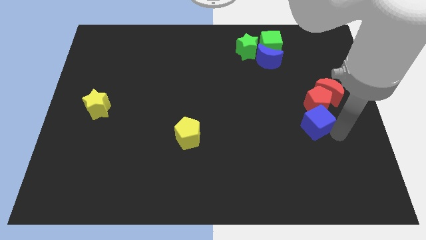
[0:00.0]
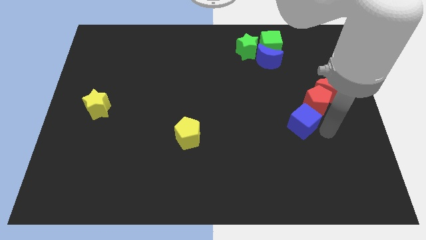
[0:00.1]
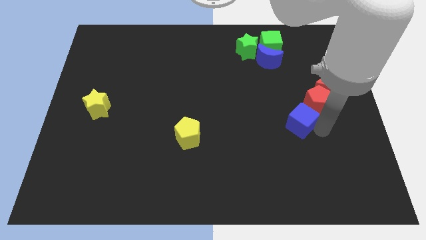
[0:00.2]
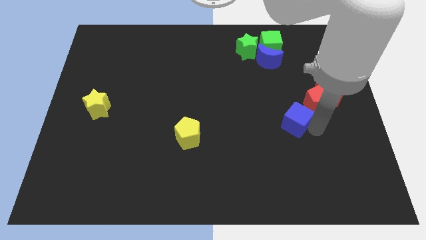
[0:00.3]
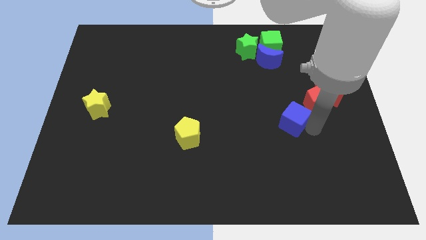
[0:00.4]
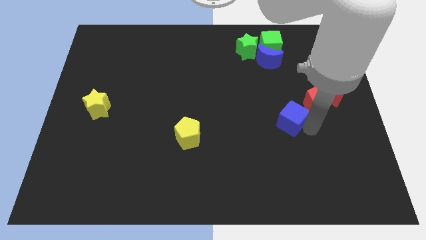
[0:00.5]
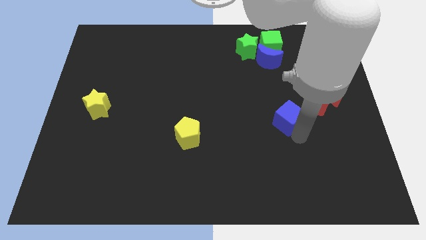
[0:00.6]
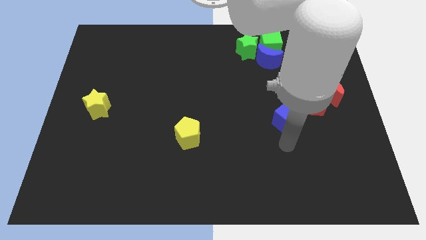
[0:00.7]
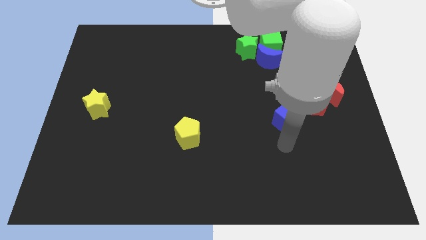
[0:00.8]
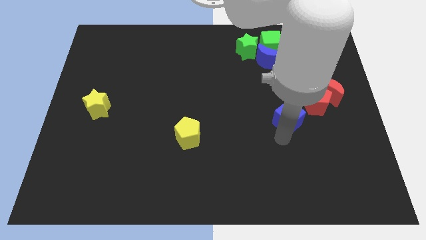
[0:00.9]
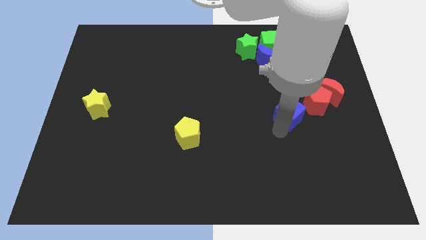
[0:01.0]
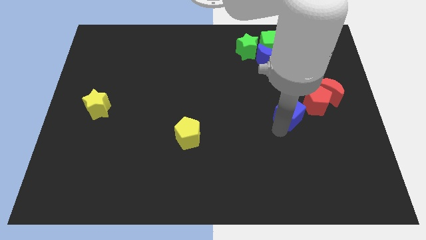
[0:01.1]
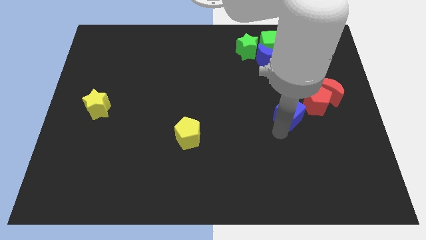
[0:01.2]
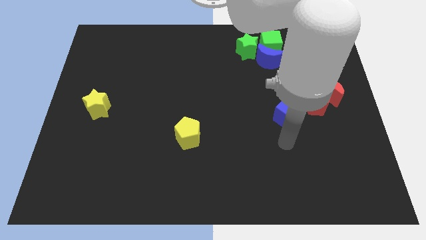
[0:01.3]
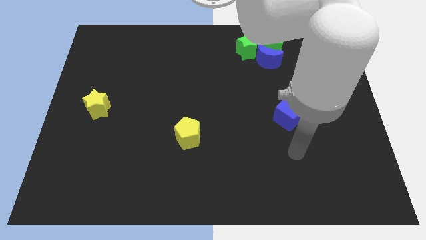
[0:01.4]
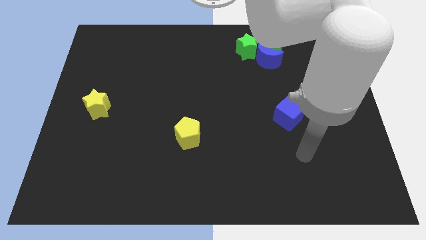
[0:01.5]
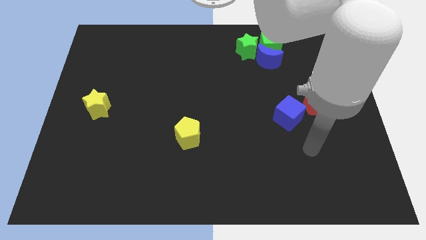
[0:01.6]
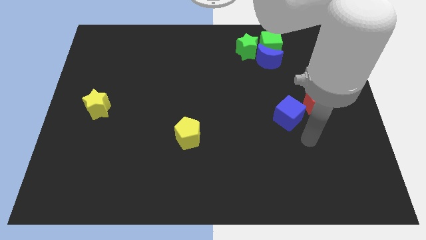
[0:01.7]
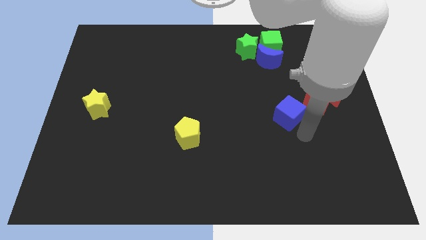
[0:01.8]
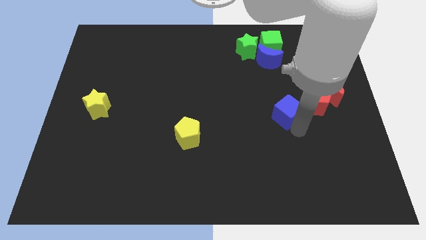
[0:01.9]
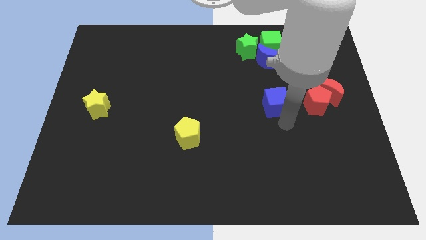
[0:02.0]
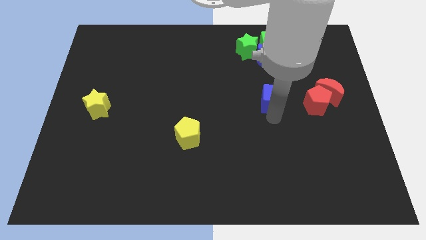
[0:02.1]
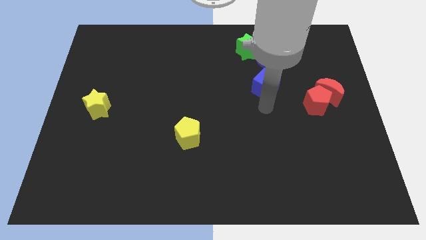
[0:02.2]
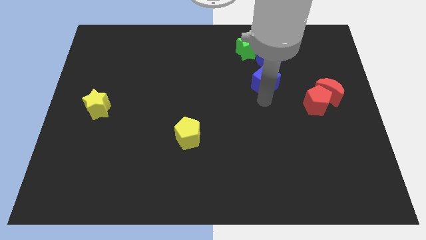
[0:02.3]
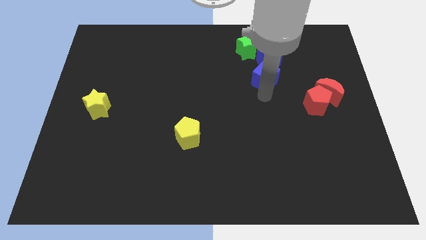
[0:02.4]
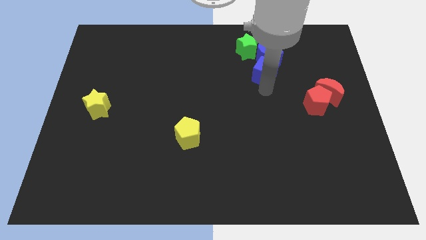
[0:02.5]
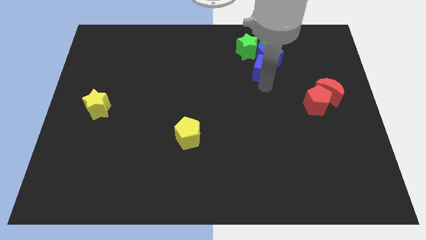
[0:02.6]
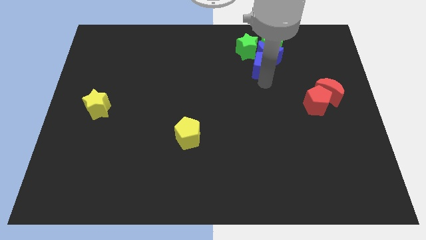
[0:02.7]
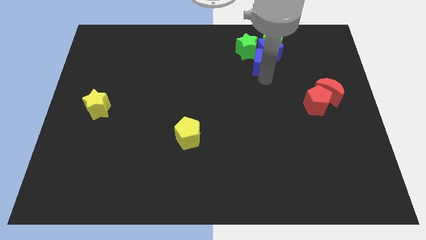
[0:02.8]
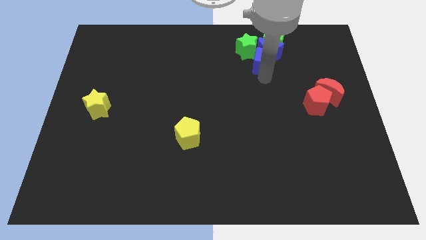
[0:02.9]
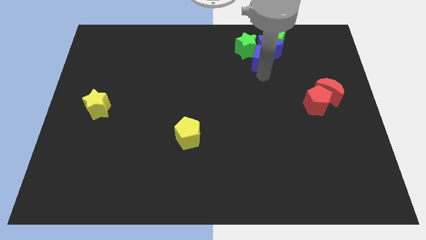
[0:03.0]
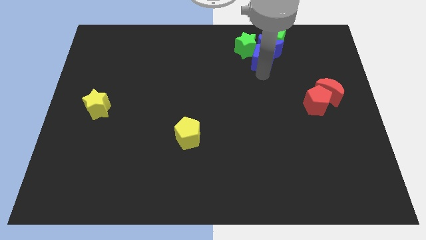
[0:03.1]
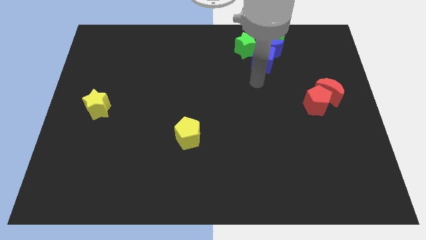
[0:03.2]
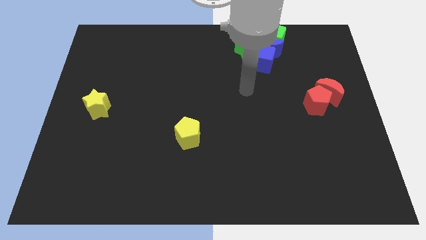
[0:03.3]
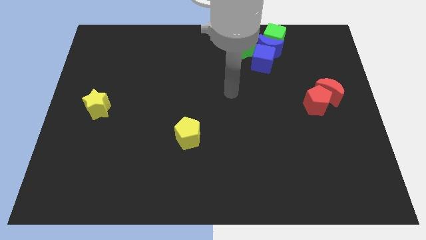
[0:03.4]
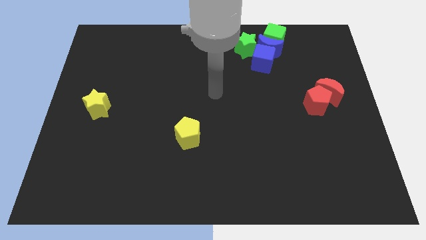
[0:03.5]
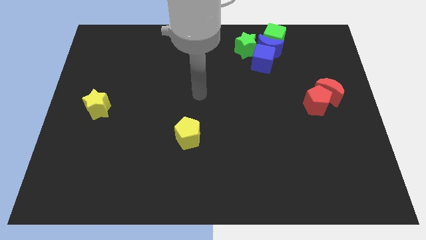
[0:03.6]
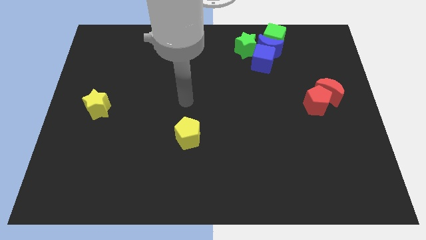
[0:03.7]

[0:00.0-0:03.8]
move the blue square below the blue moon

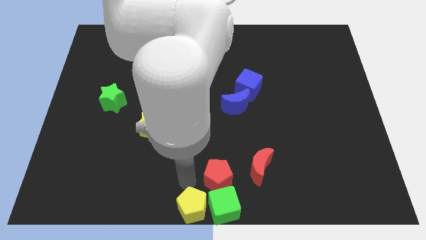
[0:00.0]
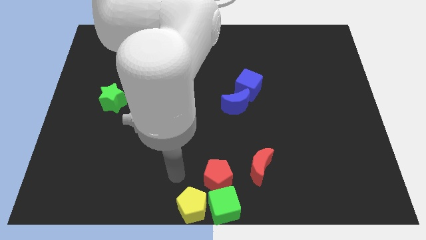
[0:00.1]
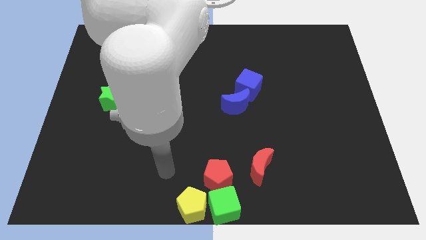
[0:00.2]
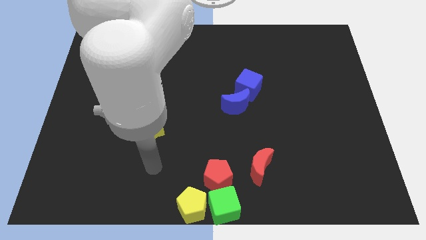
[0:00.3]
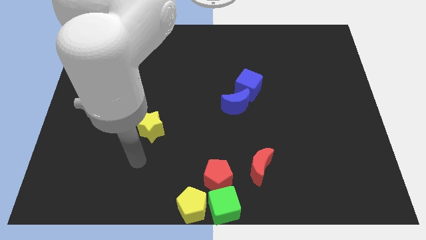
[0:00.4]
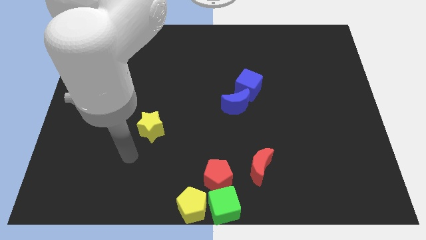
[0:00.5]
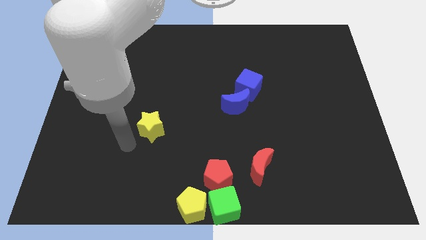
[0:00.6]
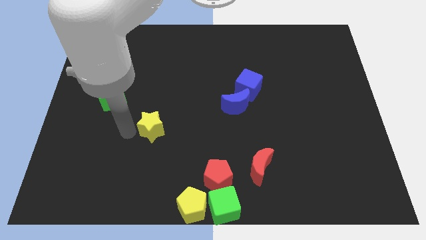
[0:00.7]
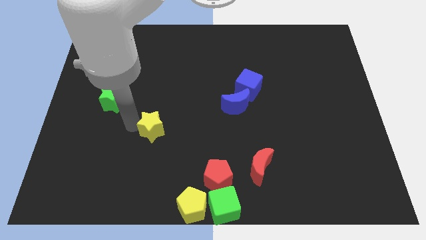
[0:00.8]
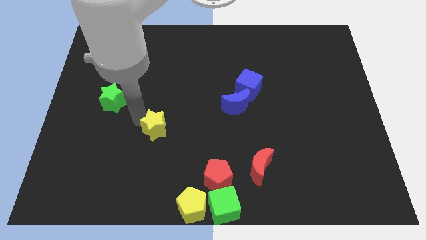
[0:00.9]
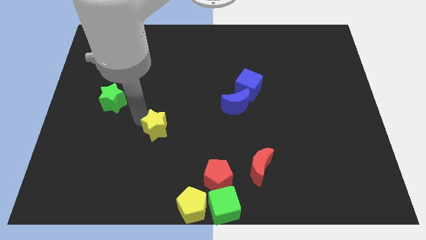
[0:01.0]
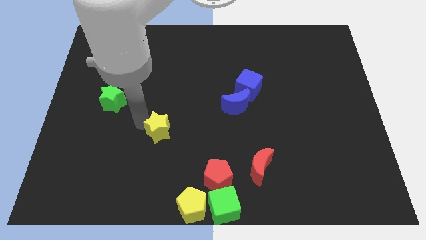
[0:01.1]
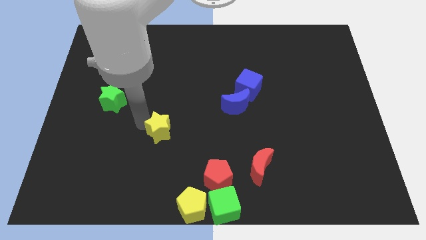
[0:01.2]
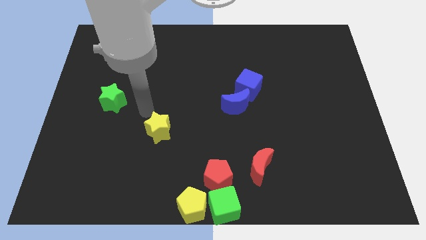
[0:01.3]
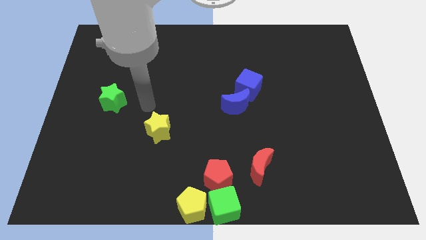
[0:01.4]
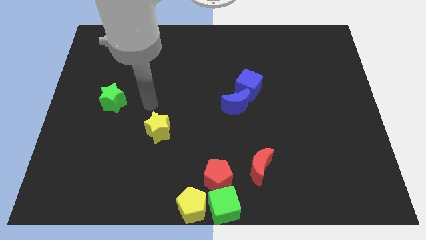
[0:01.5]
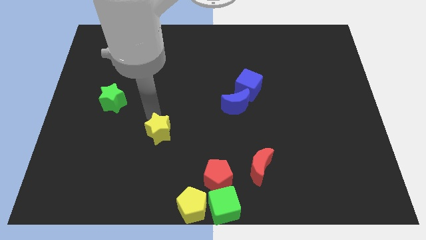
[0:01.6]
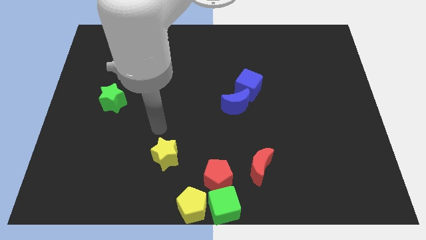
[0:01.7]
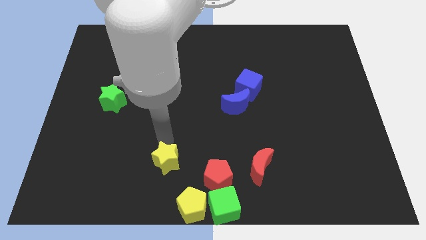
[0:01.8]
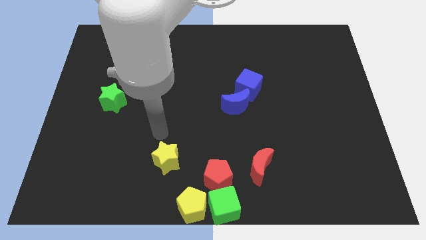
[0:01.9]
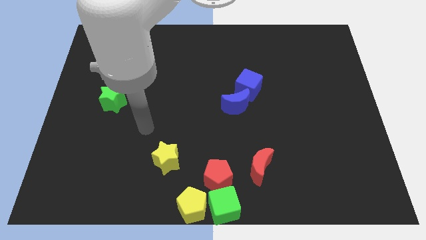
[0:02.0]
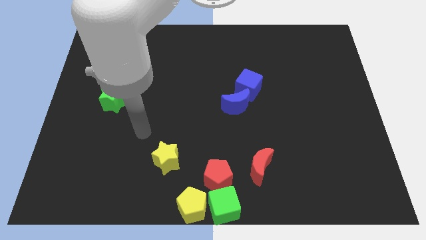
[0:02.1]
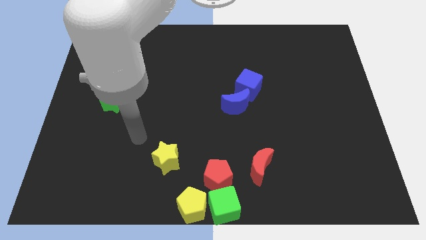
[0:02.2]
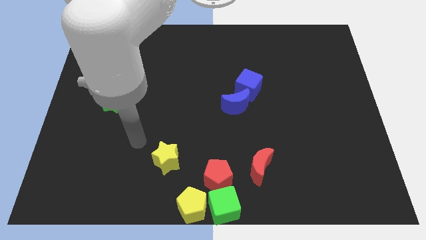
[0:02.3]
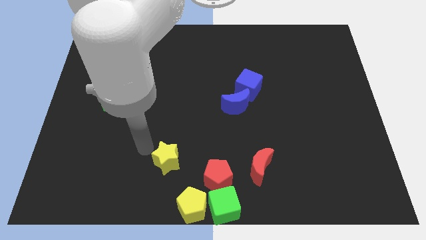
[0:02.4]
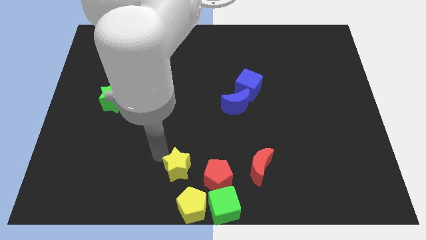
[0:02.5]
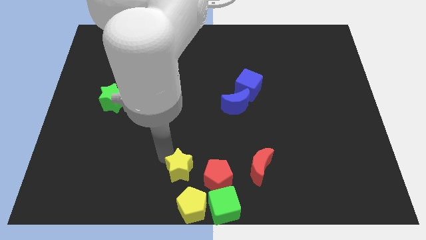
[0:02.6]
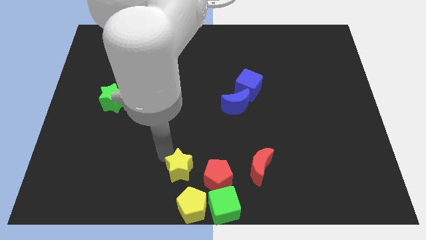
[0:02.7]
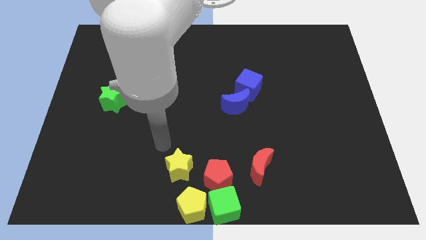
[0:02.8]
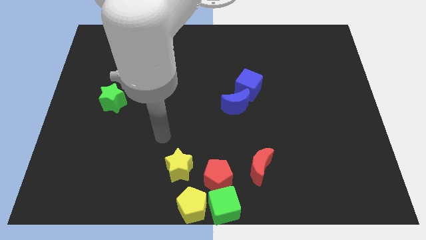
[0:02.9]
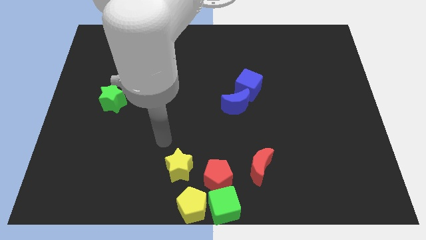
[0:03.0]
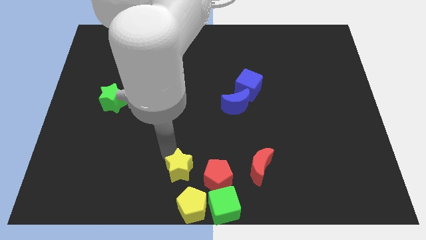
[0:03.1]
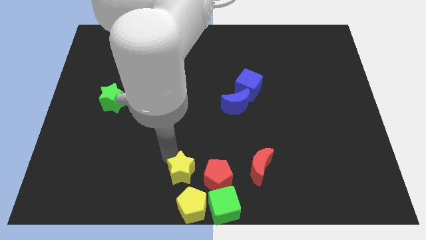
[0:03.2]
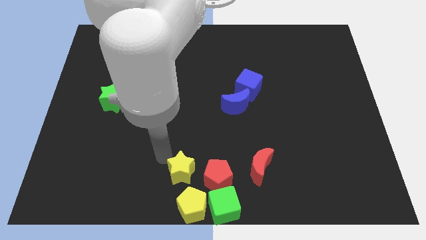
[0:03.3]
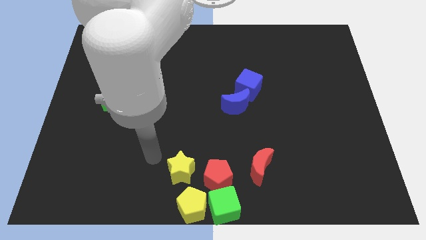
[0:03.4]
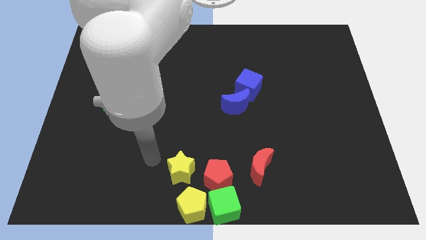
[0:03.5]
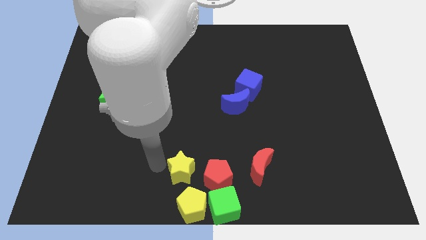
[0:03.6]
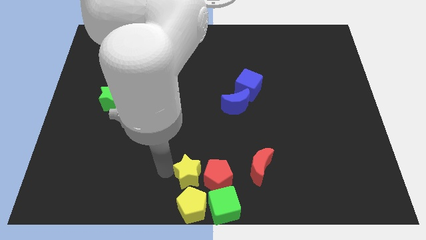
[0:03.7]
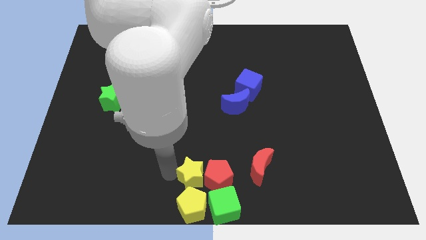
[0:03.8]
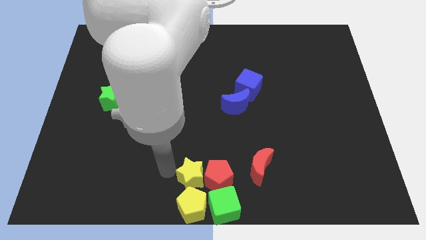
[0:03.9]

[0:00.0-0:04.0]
move the yellow star to the left of the red pentagon

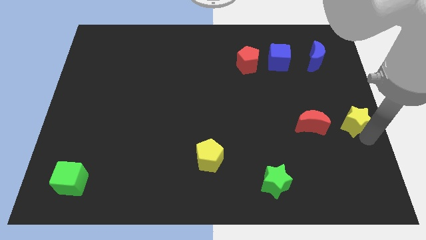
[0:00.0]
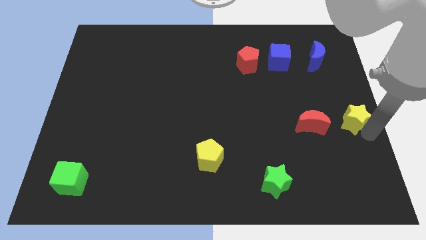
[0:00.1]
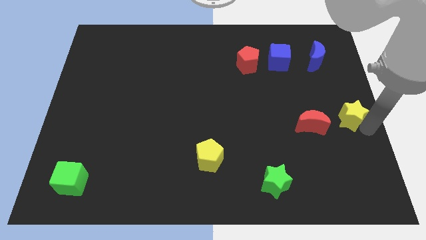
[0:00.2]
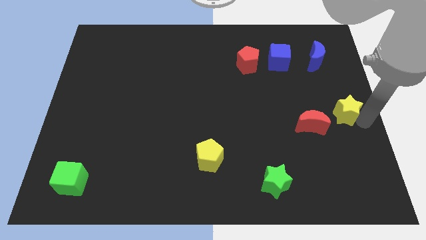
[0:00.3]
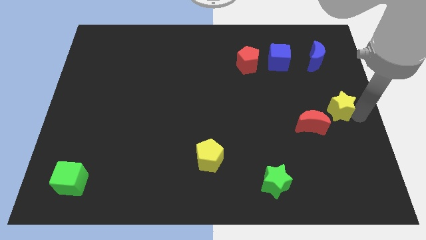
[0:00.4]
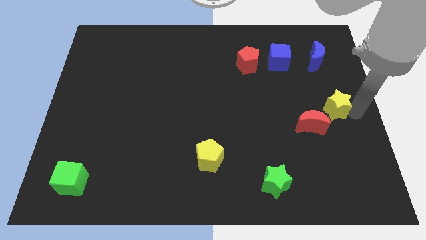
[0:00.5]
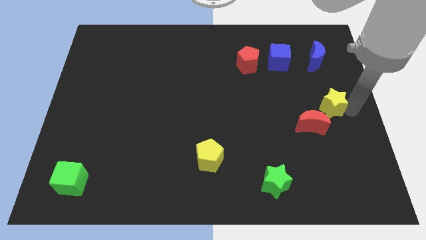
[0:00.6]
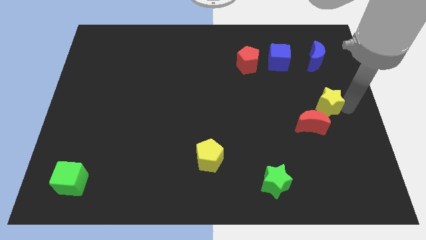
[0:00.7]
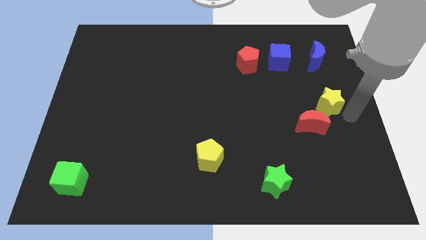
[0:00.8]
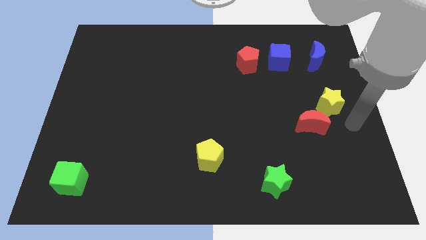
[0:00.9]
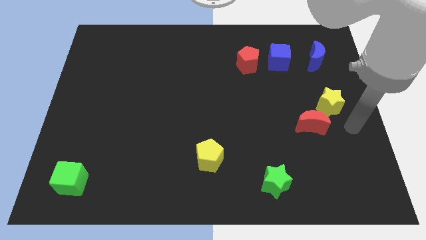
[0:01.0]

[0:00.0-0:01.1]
move the yellow star towards the top of red crescent
